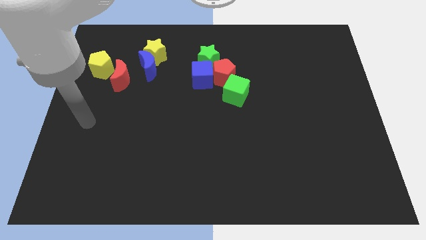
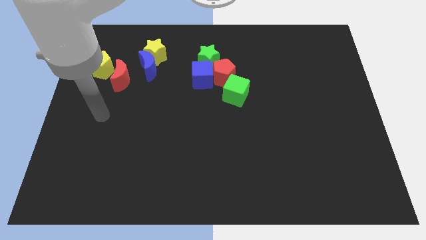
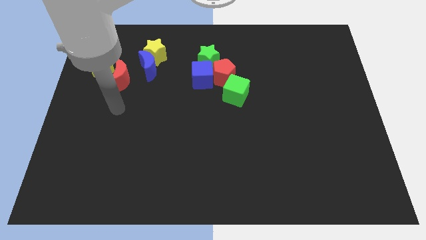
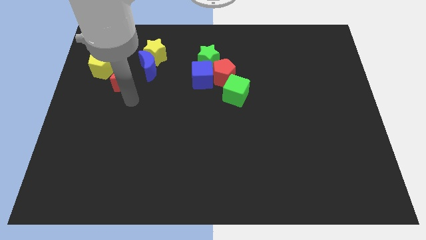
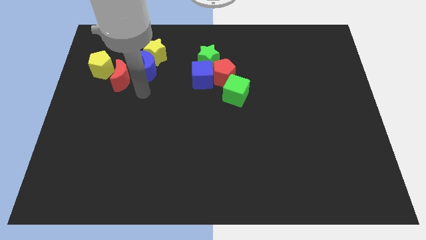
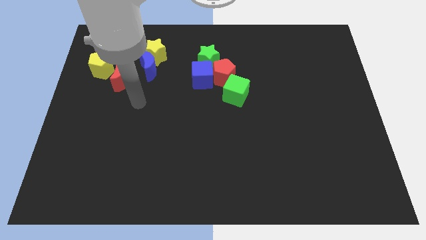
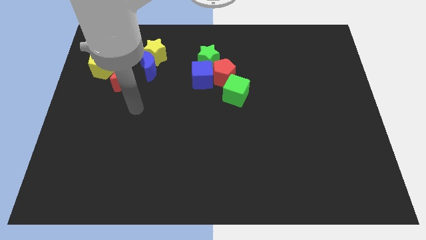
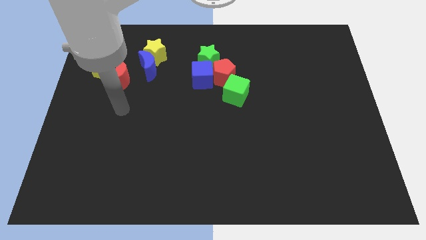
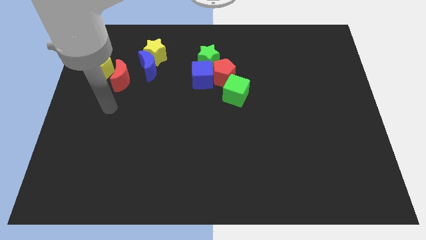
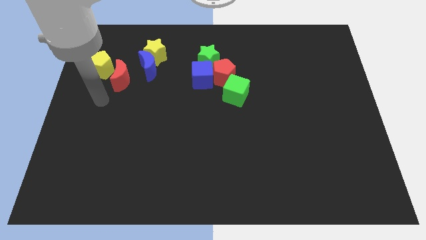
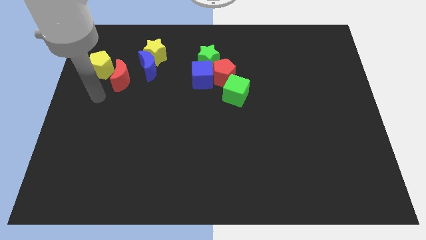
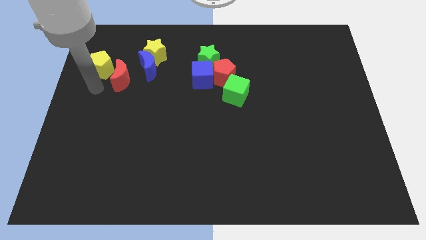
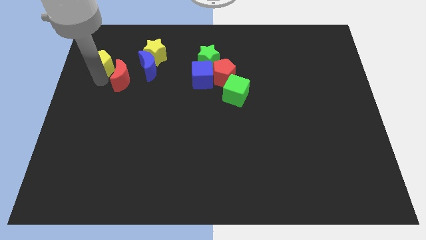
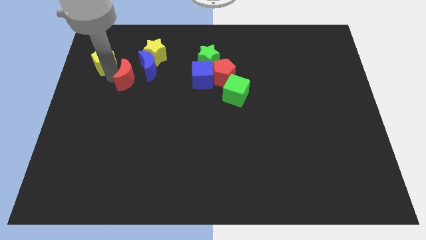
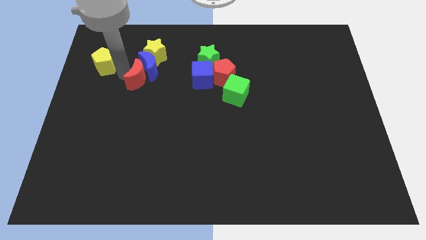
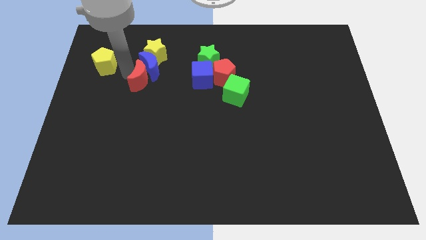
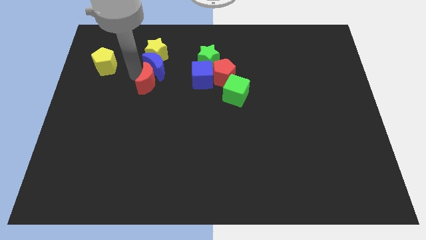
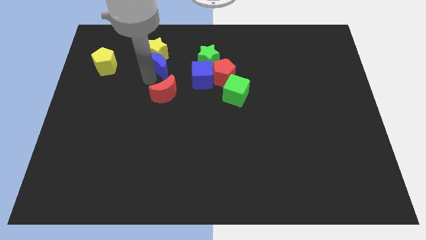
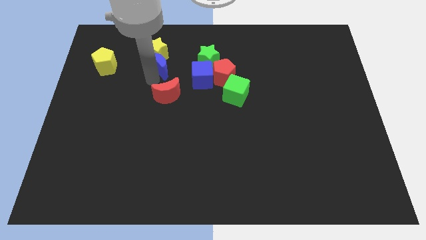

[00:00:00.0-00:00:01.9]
push the red moon below blue moon

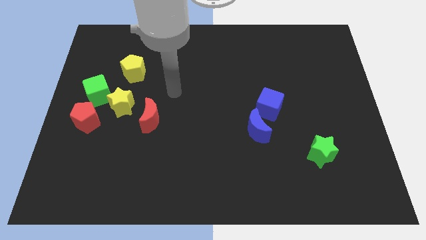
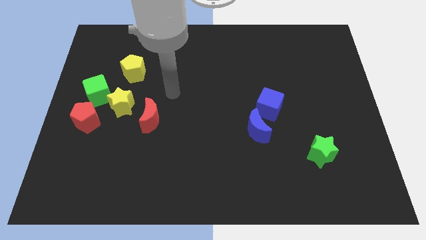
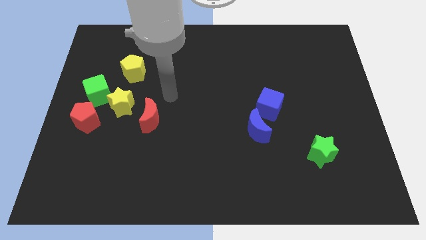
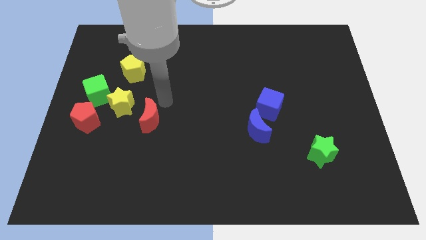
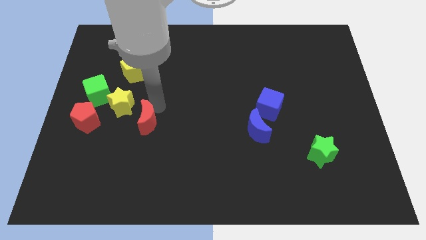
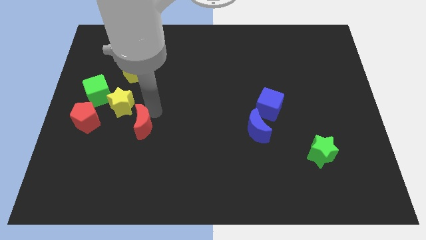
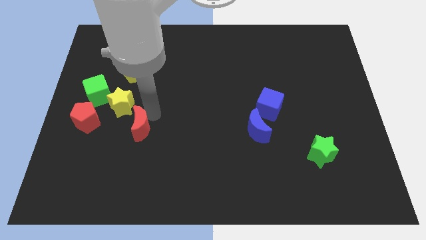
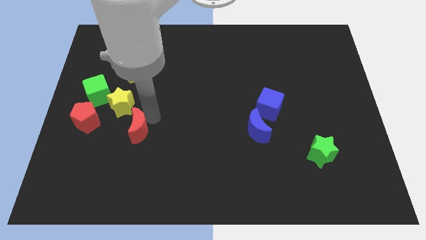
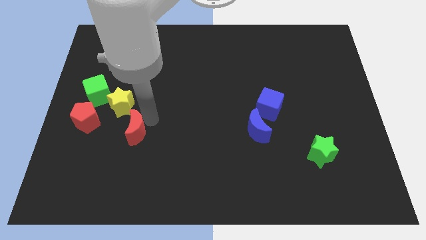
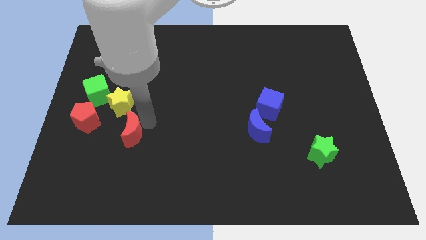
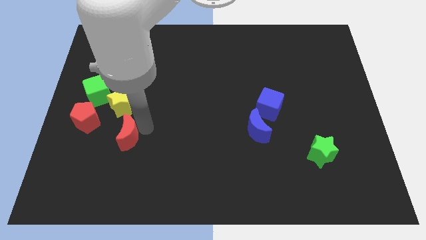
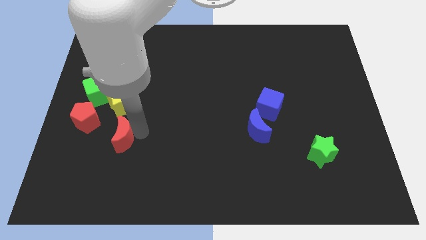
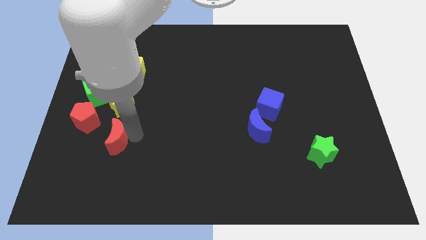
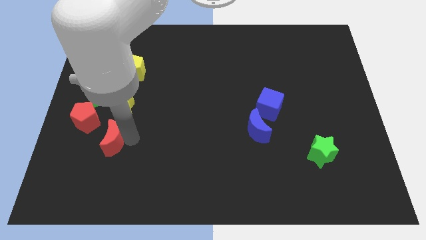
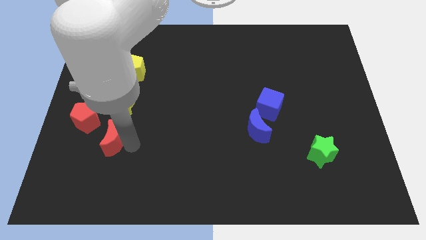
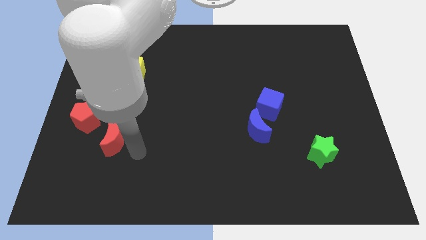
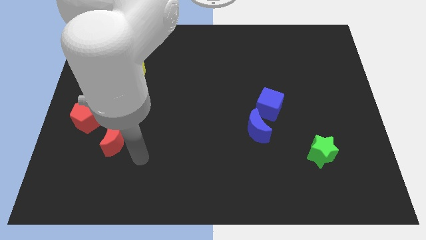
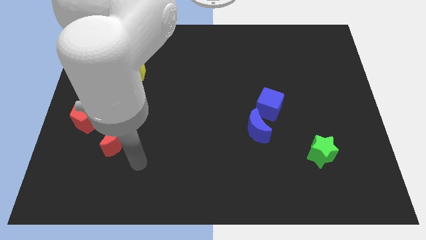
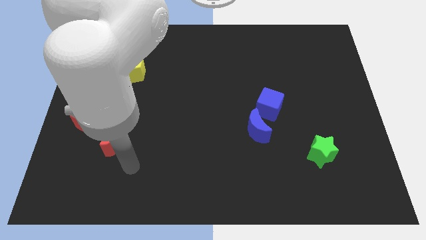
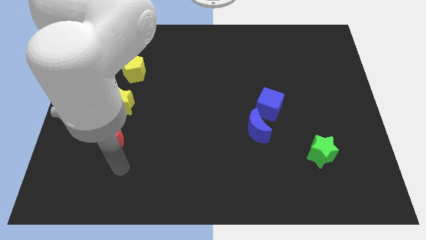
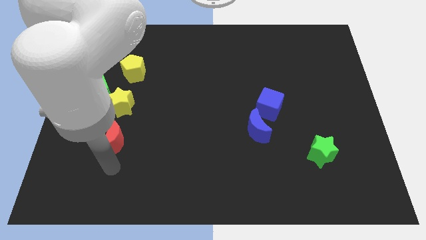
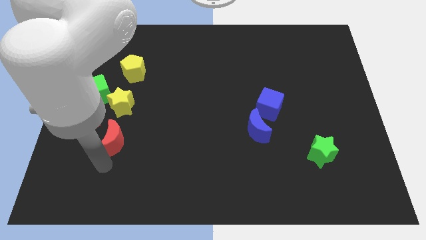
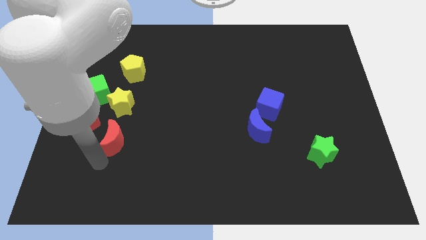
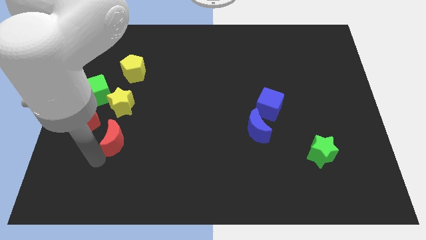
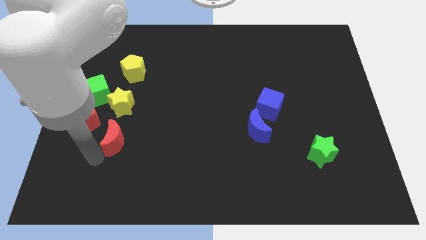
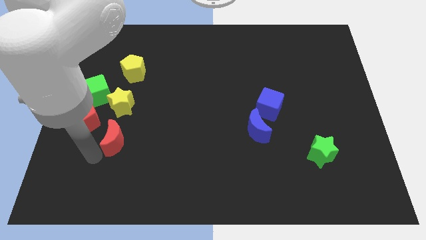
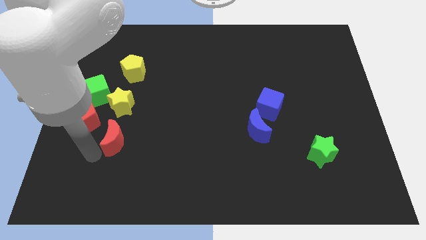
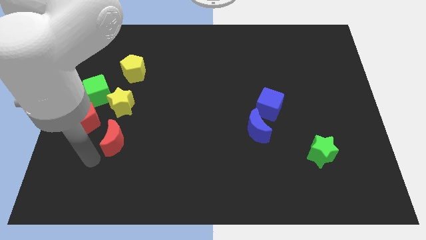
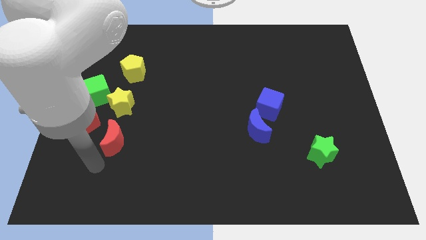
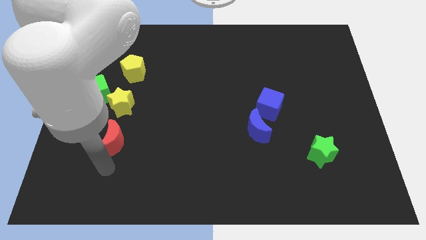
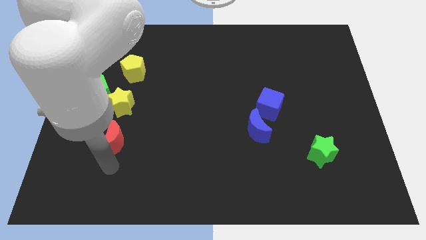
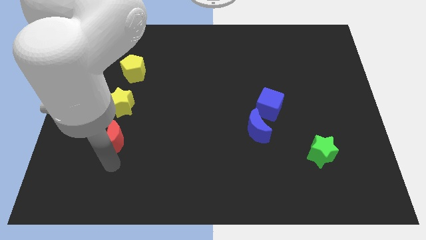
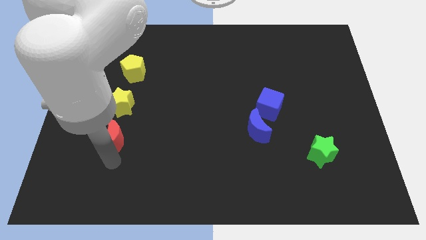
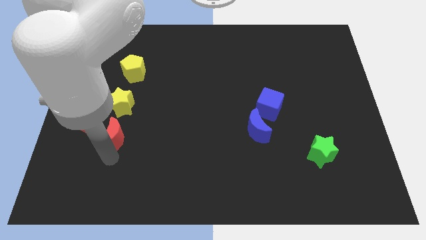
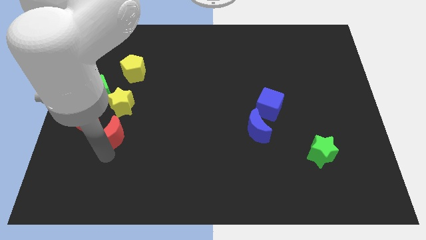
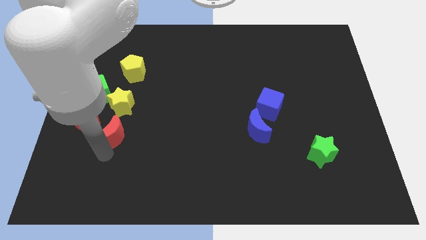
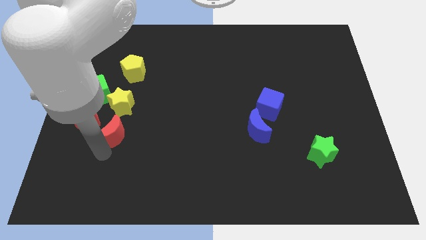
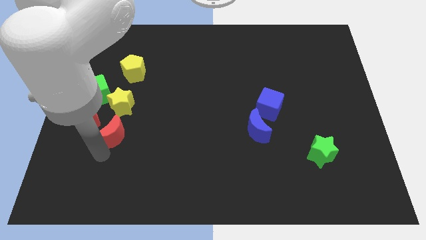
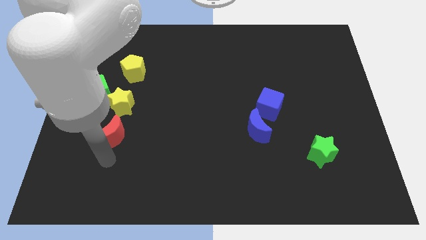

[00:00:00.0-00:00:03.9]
move the red crescent below the yellow star

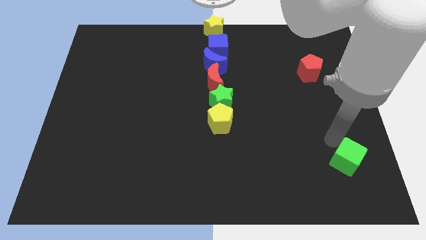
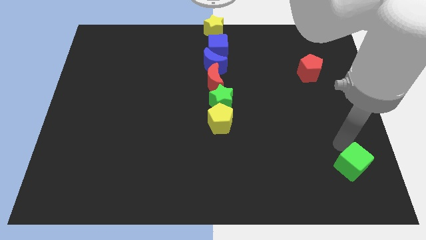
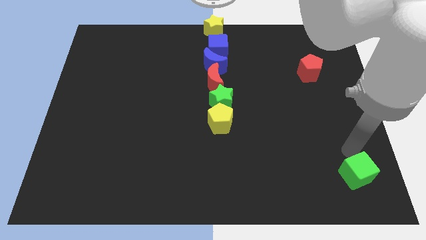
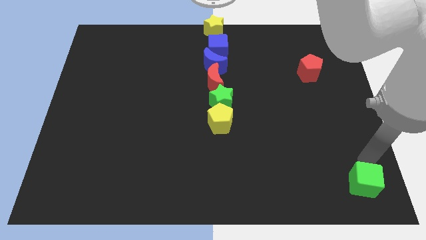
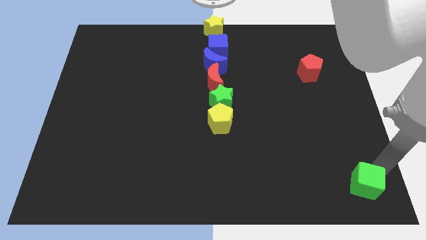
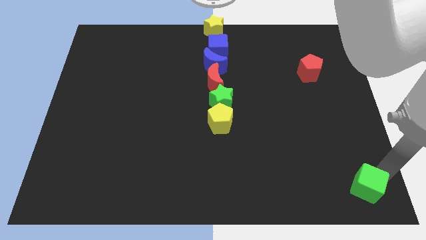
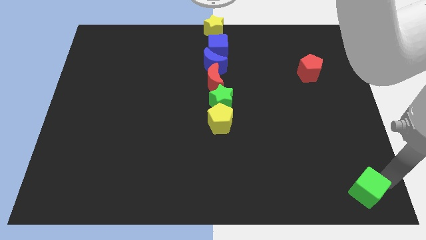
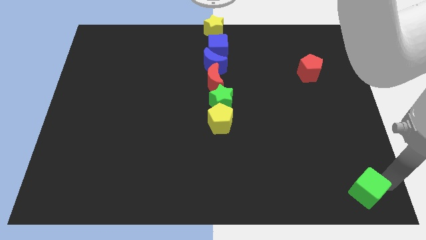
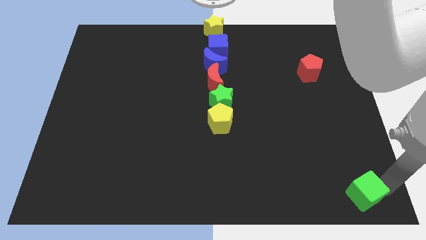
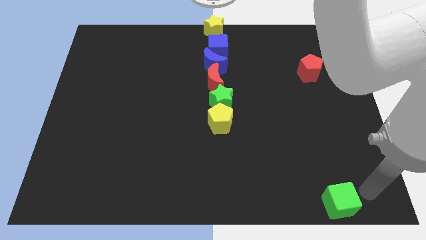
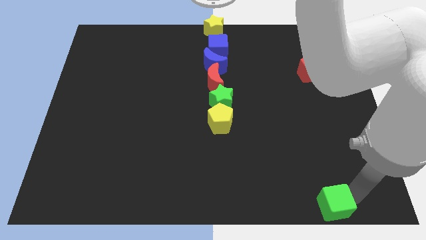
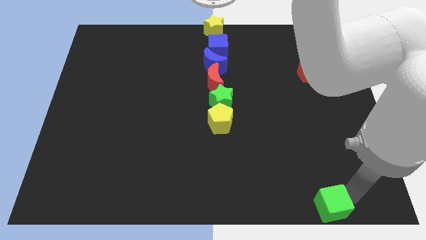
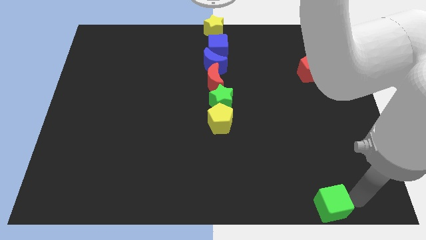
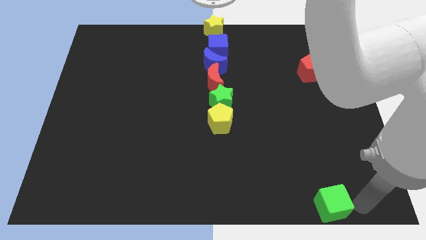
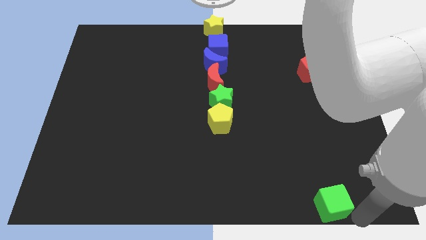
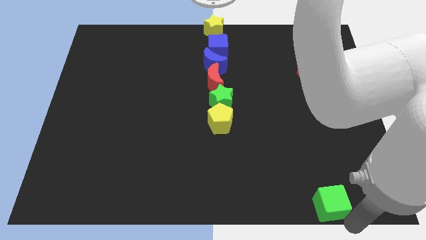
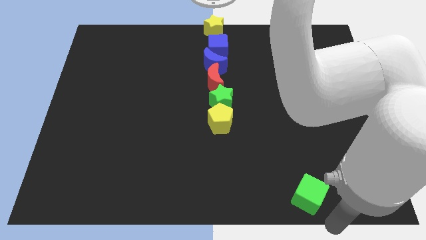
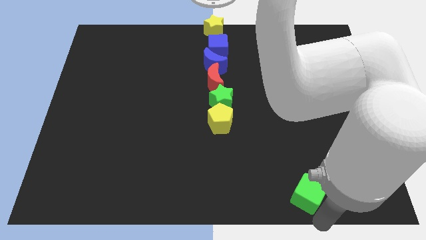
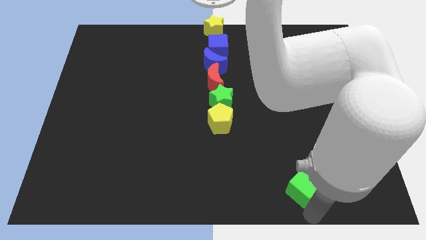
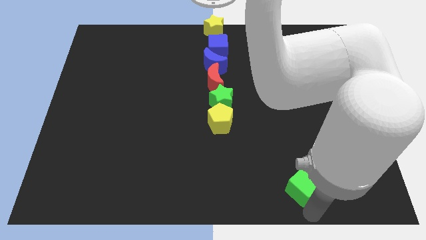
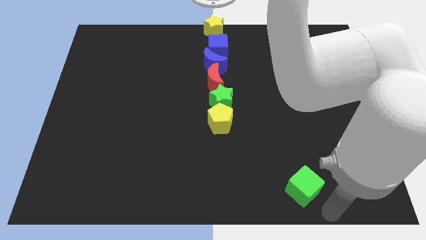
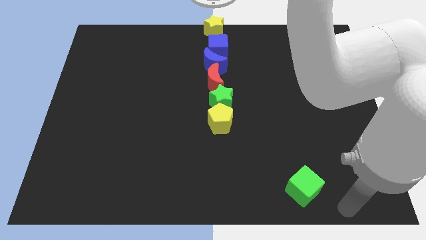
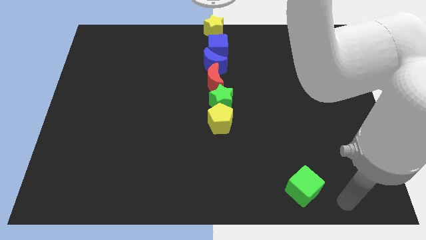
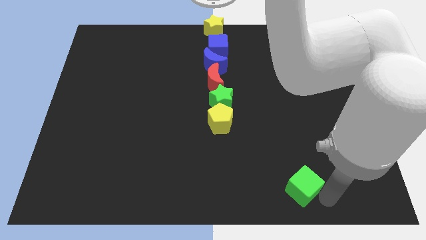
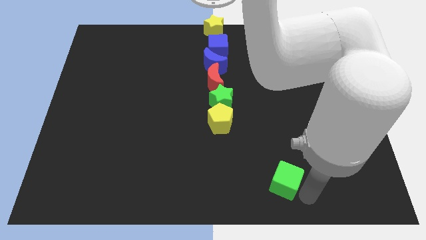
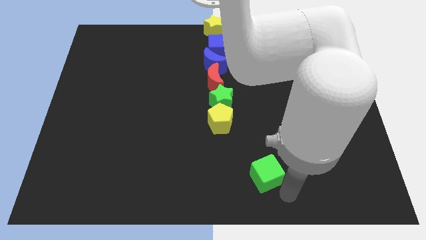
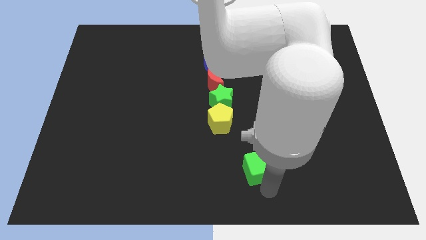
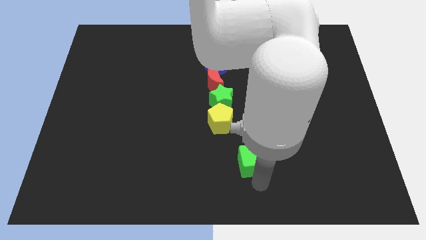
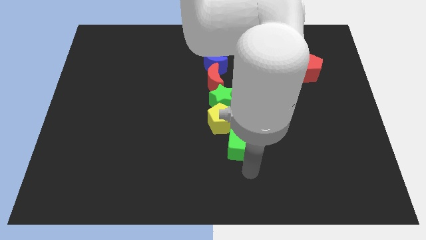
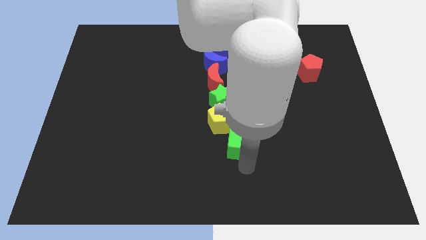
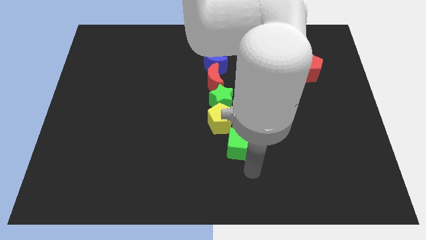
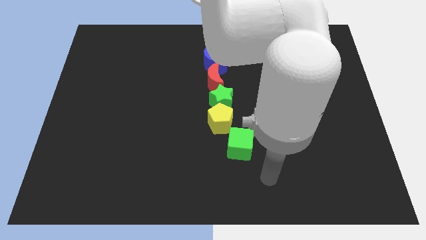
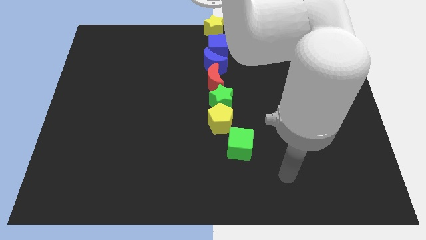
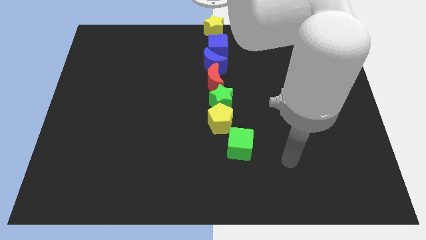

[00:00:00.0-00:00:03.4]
slide the green cube to the bottom right side of the yellow pentagon
